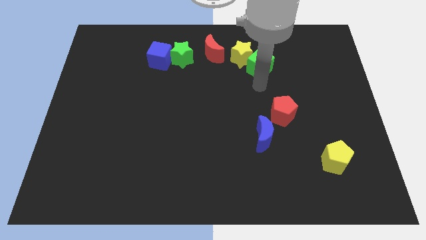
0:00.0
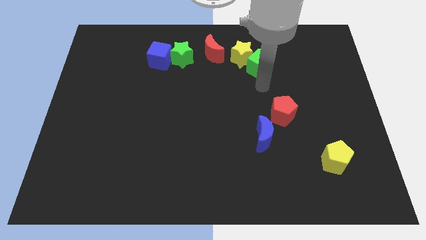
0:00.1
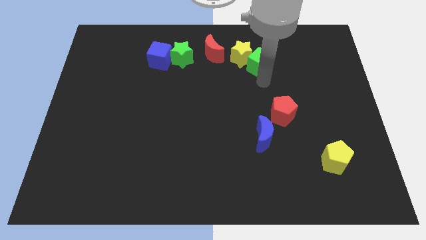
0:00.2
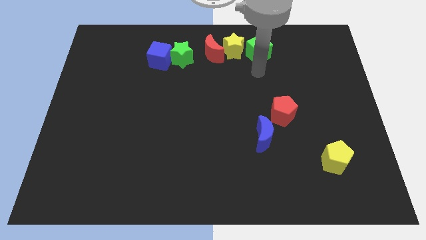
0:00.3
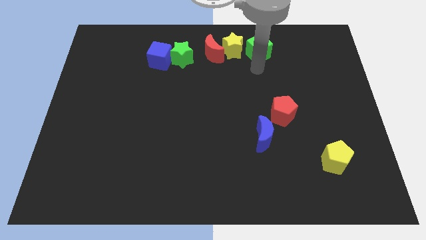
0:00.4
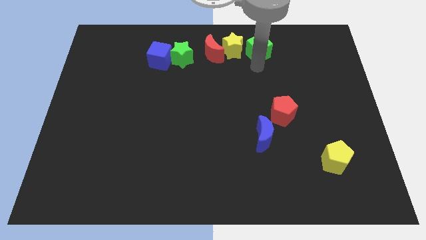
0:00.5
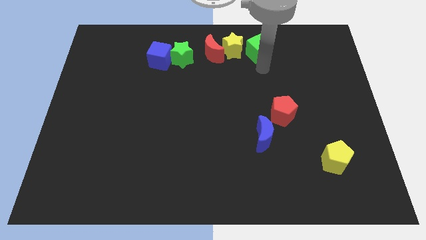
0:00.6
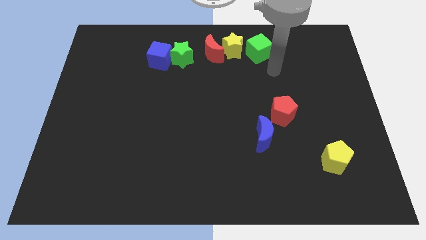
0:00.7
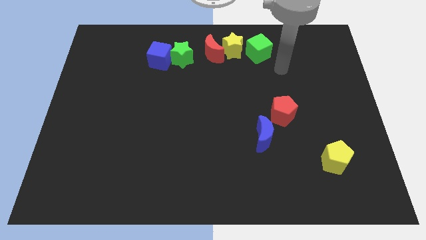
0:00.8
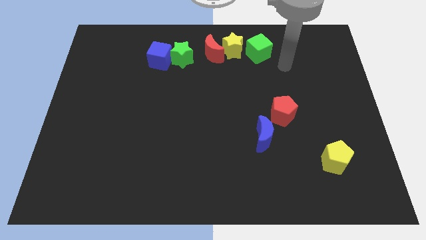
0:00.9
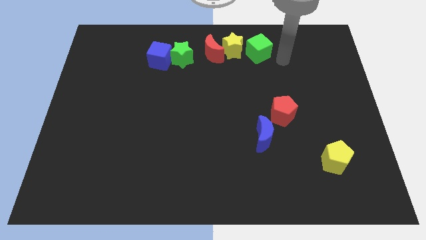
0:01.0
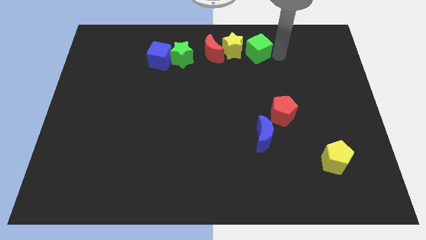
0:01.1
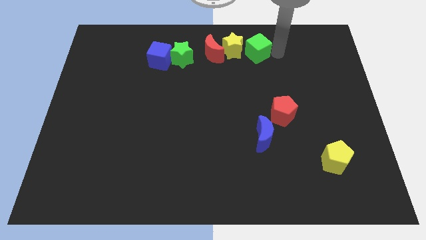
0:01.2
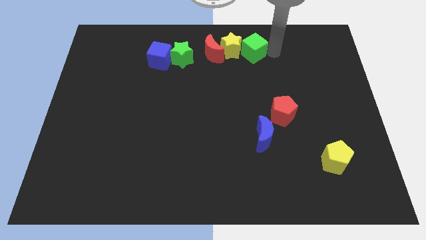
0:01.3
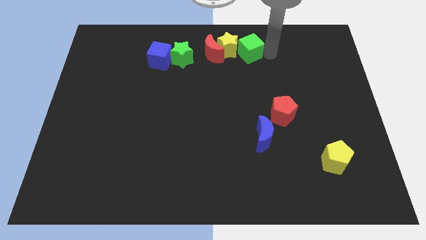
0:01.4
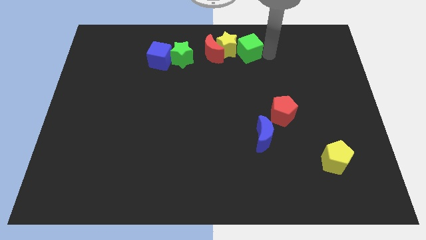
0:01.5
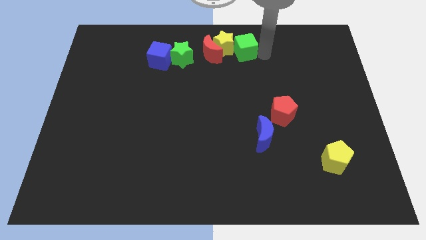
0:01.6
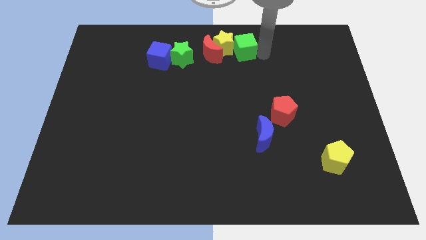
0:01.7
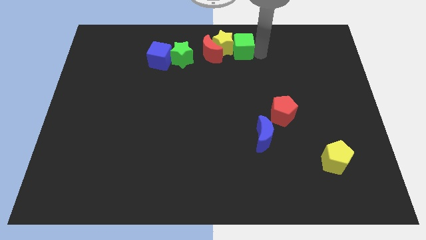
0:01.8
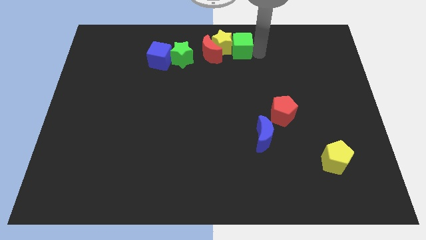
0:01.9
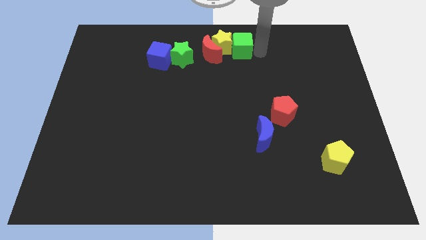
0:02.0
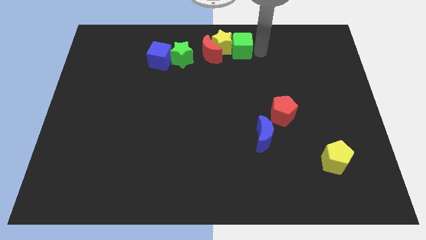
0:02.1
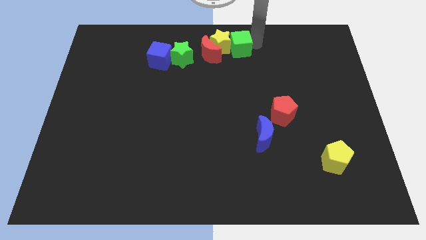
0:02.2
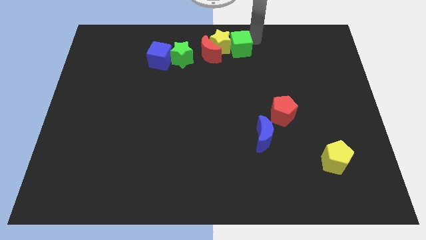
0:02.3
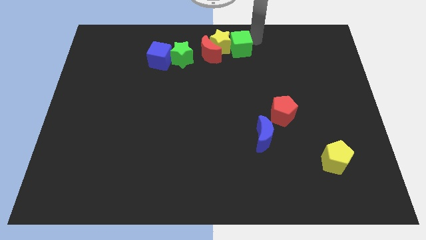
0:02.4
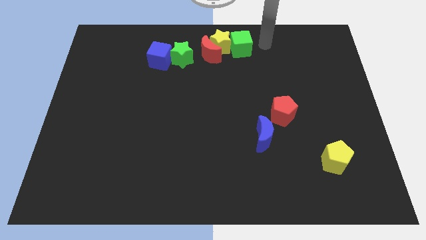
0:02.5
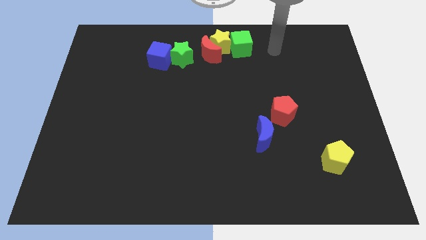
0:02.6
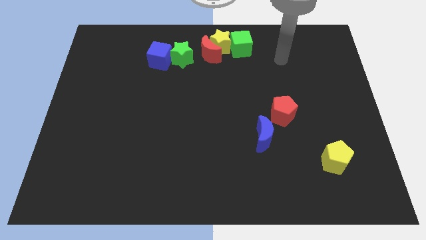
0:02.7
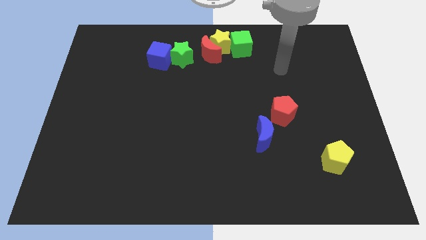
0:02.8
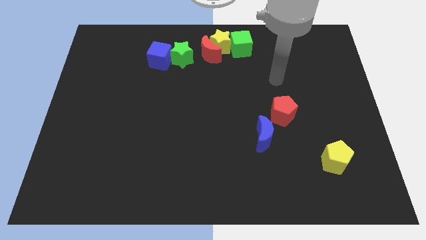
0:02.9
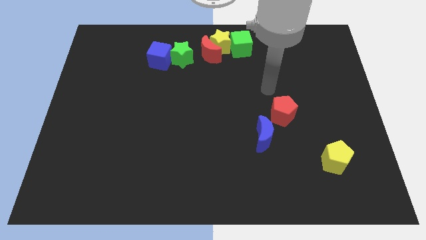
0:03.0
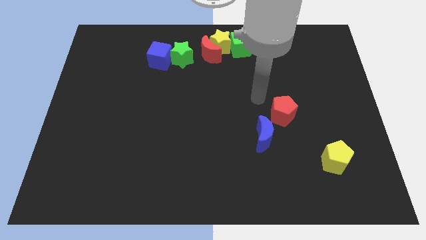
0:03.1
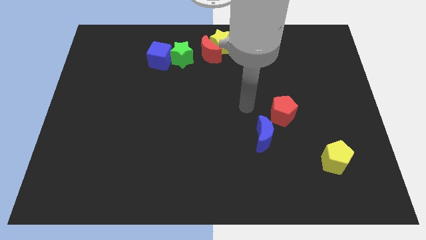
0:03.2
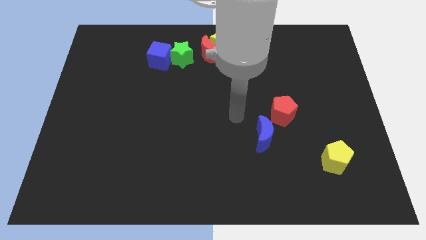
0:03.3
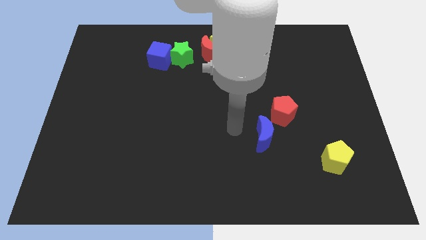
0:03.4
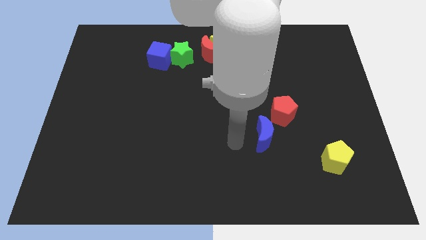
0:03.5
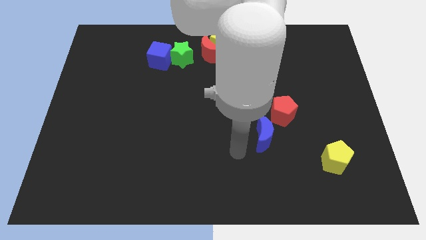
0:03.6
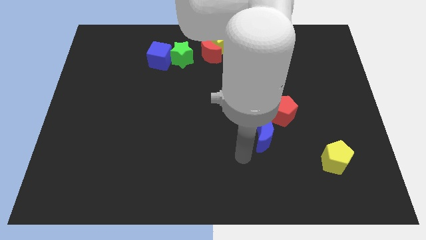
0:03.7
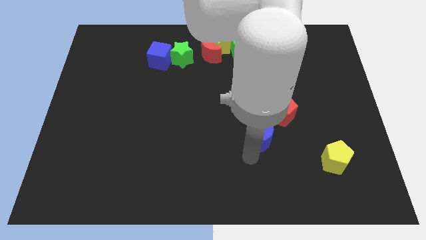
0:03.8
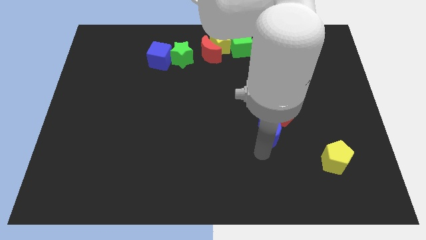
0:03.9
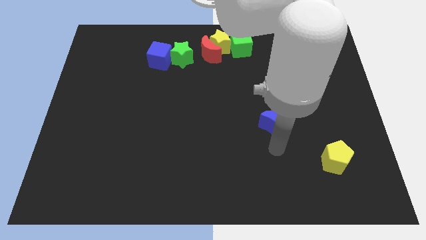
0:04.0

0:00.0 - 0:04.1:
push the yellow star with green cube into the red crescent

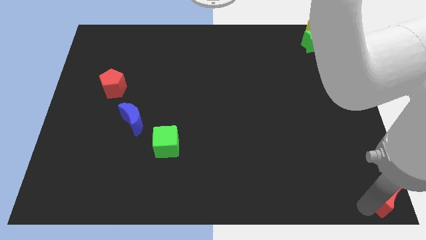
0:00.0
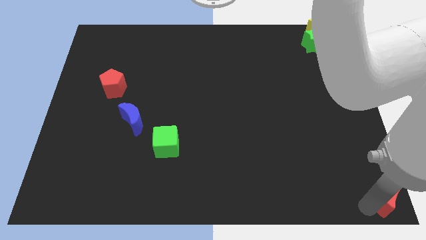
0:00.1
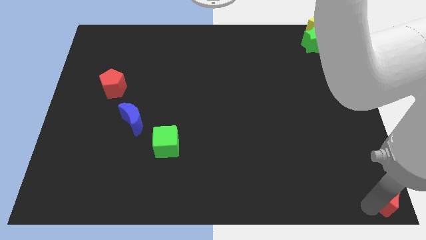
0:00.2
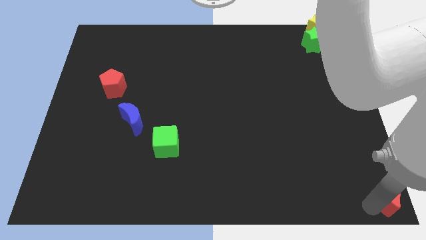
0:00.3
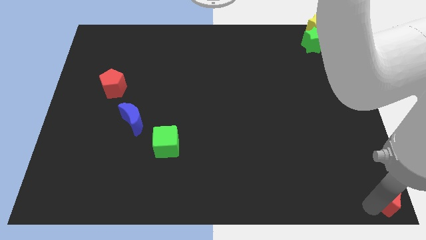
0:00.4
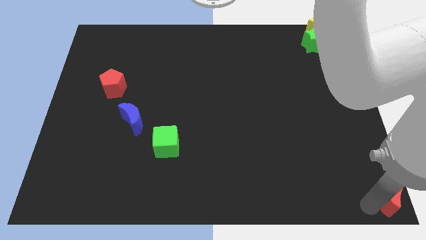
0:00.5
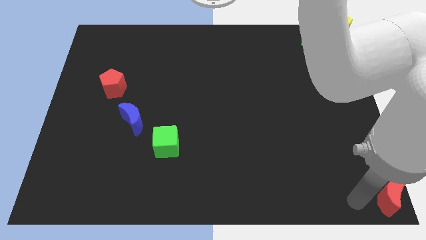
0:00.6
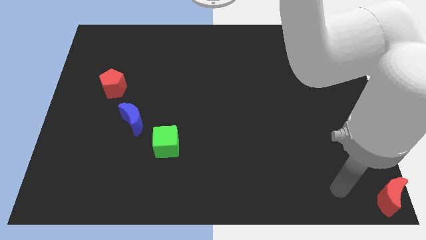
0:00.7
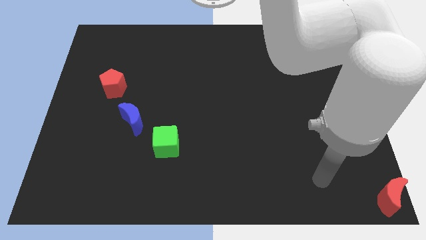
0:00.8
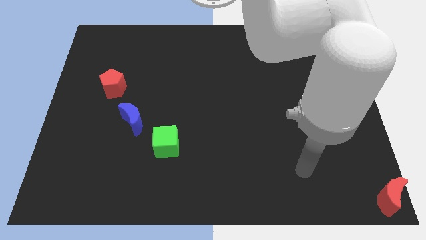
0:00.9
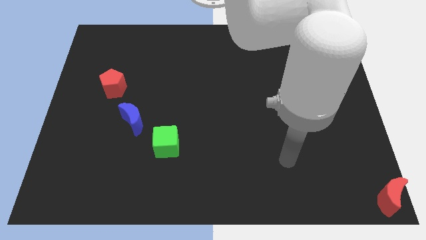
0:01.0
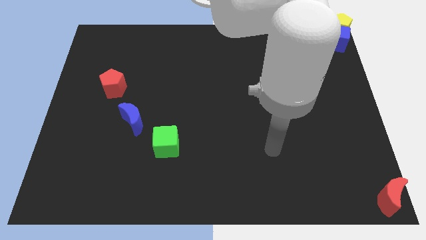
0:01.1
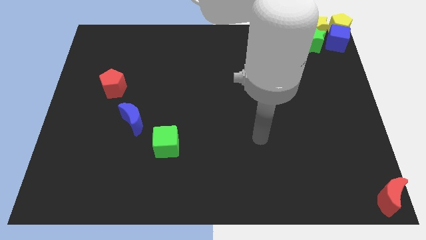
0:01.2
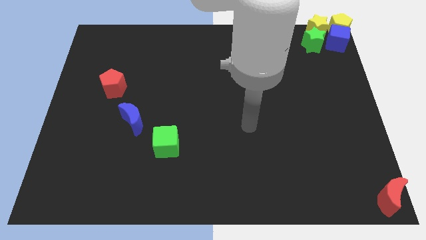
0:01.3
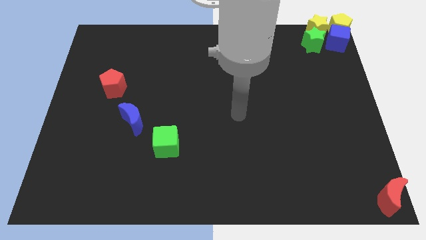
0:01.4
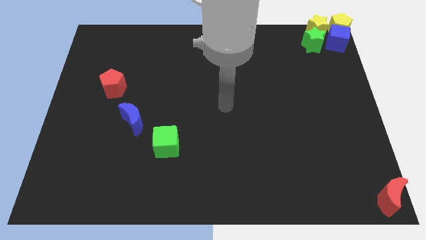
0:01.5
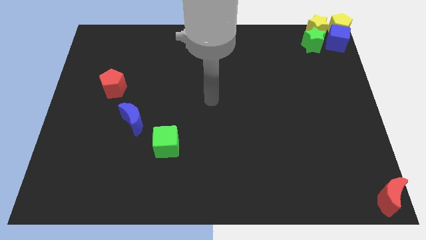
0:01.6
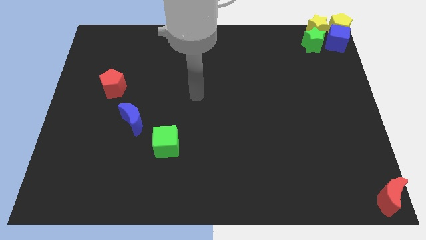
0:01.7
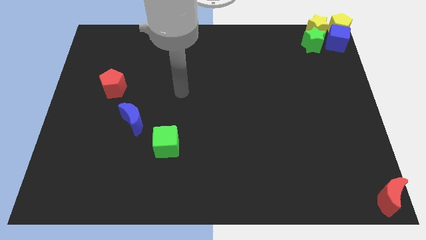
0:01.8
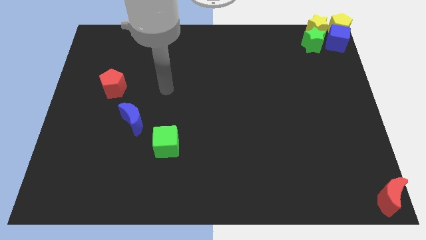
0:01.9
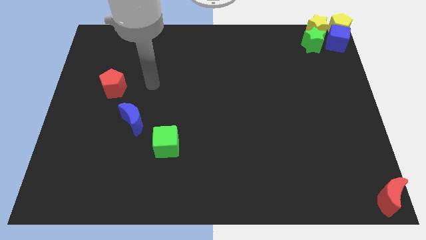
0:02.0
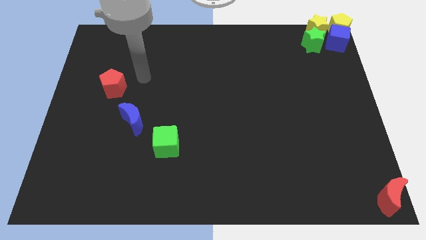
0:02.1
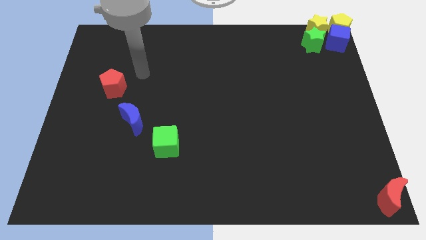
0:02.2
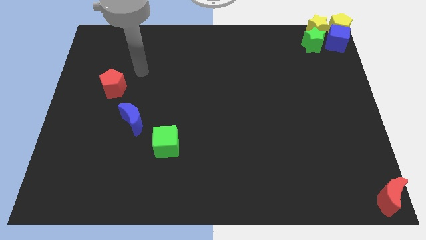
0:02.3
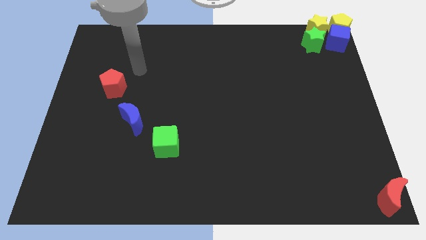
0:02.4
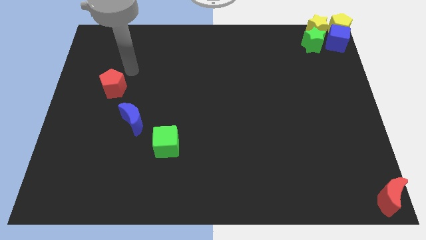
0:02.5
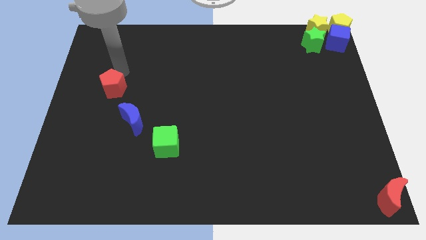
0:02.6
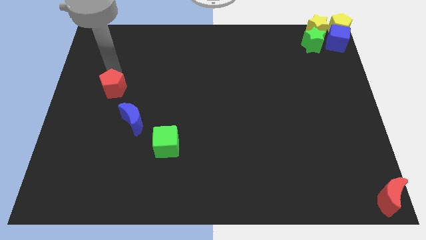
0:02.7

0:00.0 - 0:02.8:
place the arm above the red pentagon

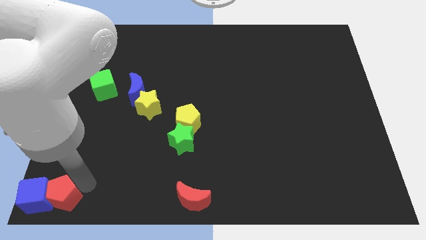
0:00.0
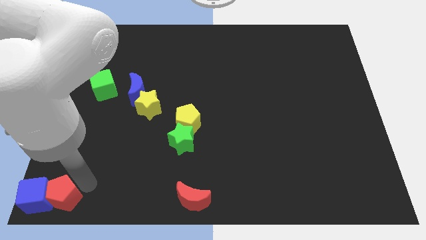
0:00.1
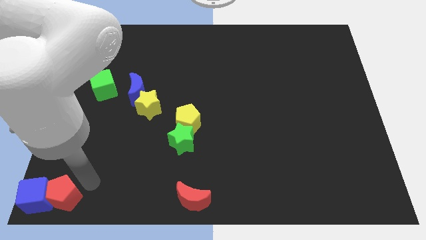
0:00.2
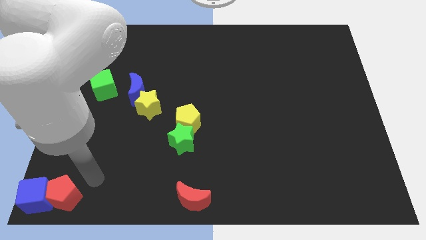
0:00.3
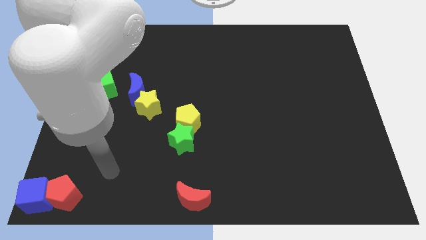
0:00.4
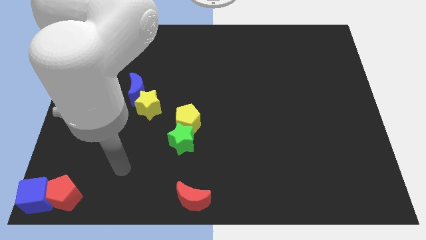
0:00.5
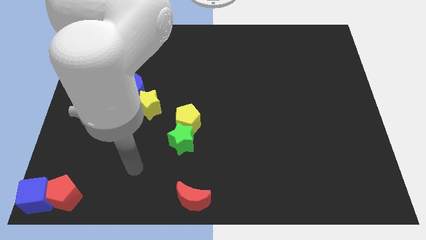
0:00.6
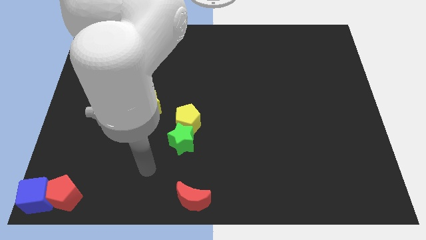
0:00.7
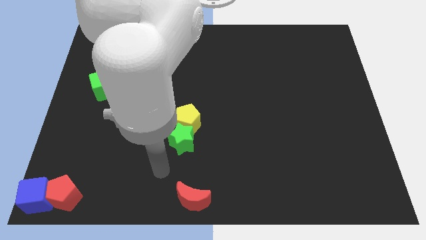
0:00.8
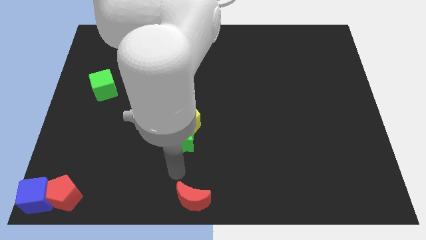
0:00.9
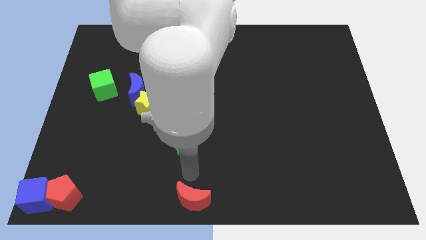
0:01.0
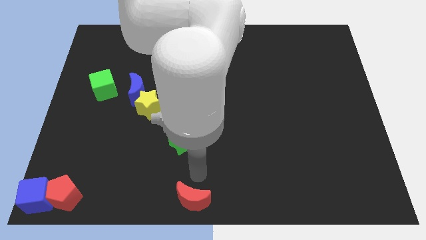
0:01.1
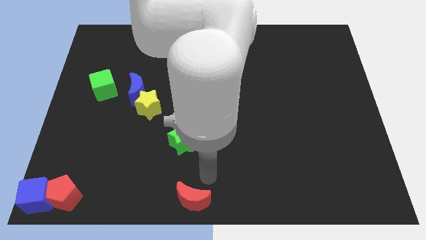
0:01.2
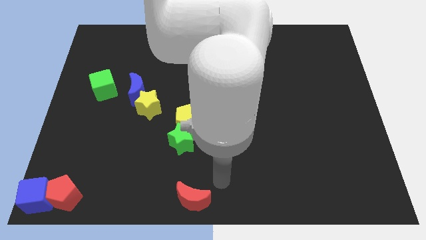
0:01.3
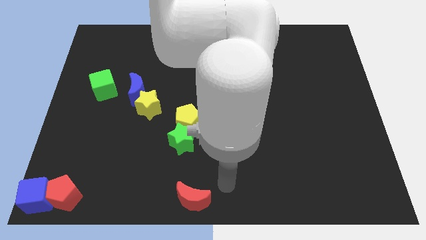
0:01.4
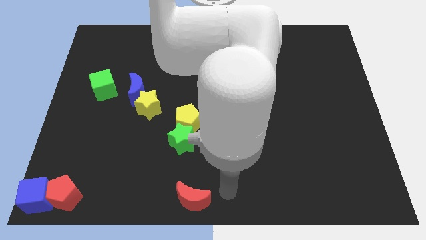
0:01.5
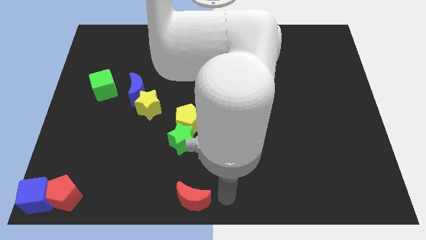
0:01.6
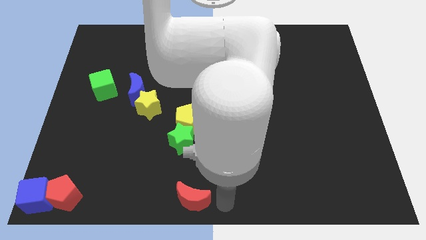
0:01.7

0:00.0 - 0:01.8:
move the arm right to the red crescent

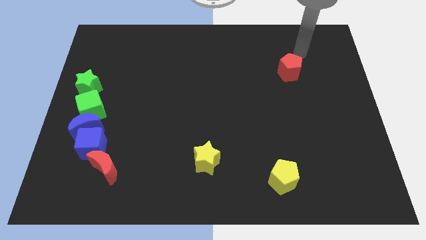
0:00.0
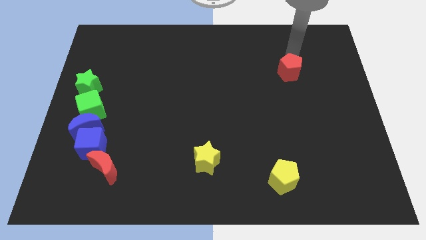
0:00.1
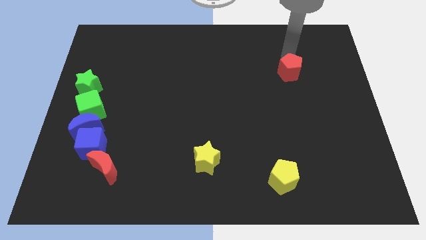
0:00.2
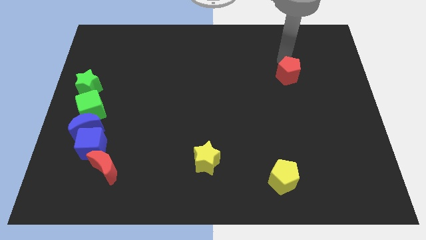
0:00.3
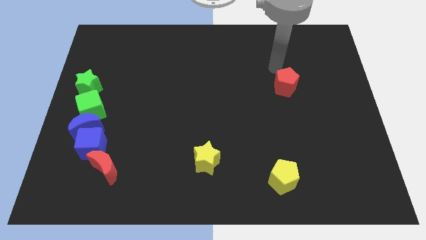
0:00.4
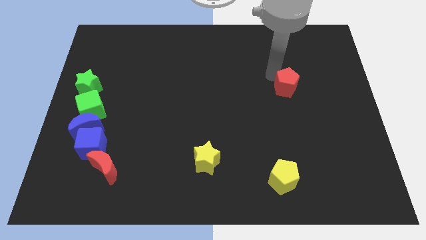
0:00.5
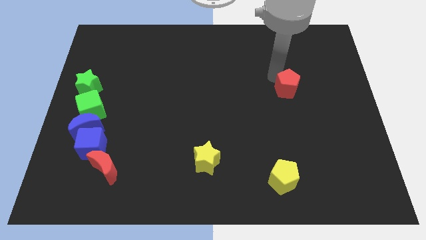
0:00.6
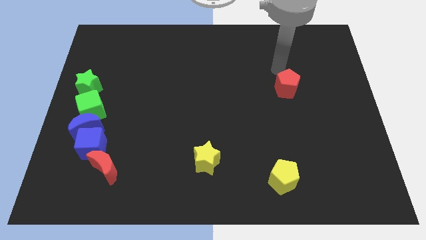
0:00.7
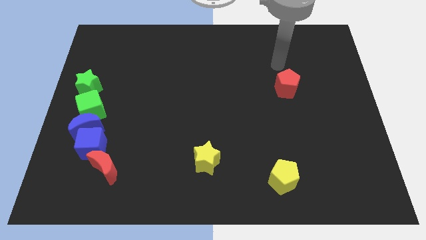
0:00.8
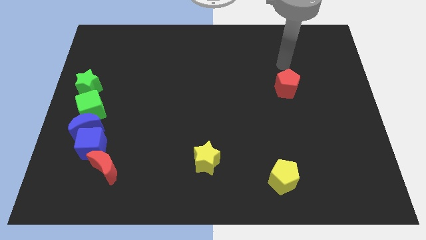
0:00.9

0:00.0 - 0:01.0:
push the red pentagon to the bottom of the board
